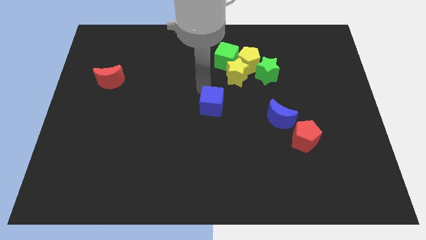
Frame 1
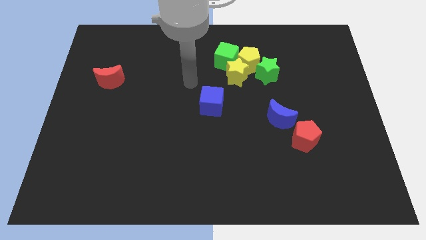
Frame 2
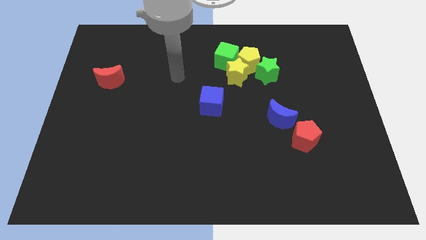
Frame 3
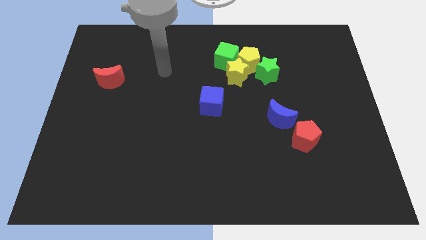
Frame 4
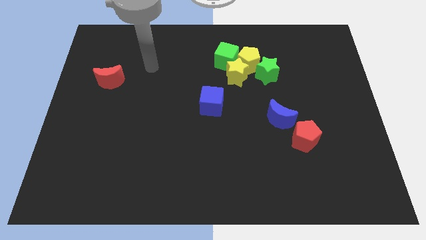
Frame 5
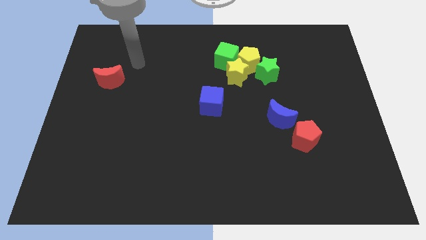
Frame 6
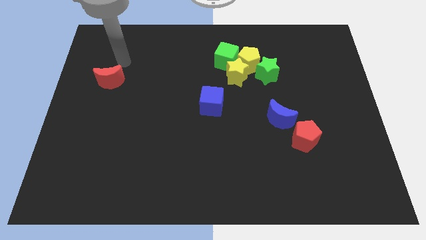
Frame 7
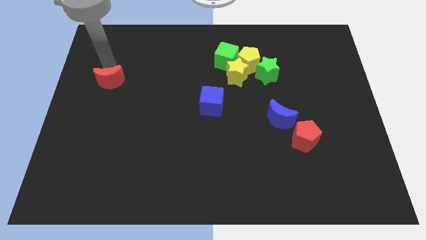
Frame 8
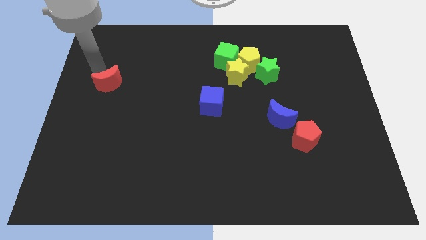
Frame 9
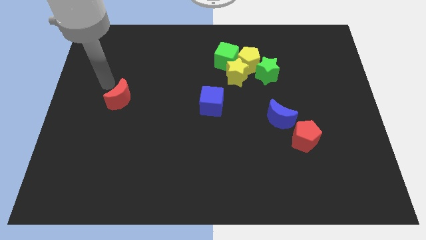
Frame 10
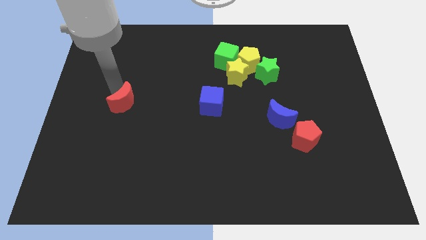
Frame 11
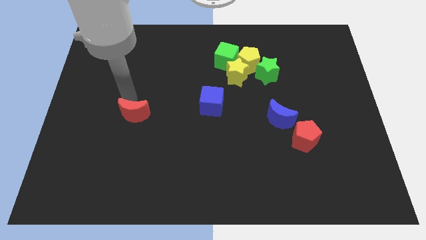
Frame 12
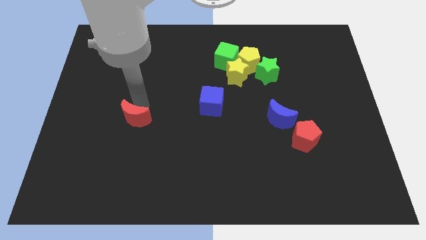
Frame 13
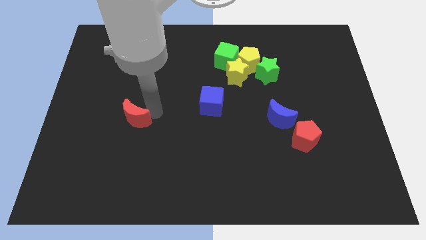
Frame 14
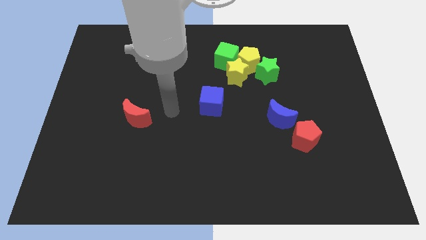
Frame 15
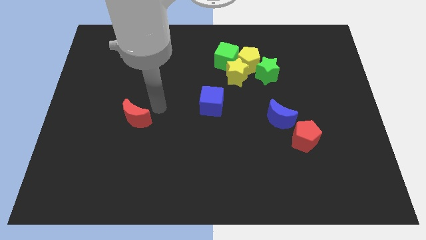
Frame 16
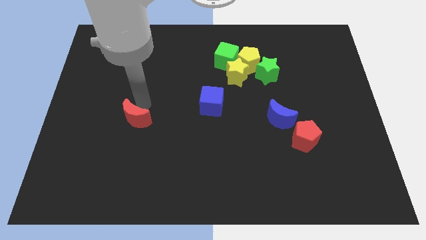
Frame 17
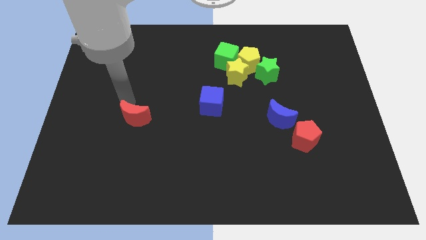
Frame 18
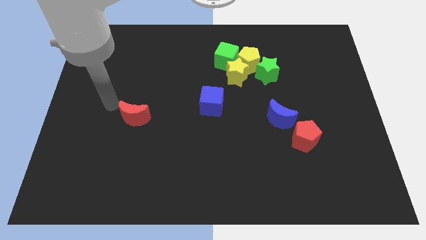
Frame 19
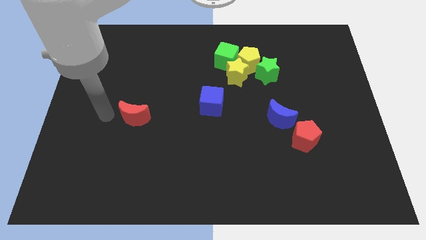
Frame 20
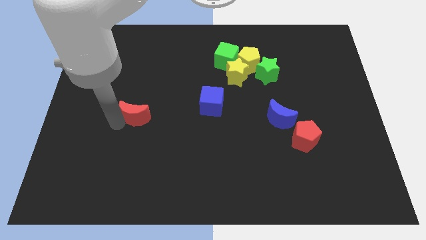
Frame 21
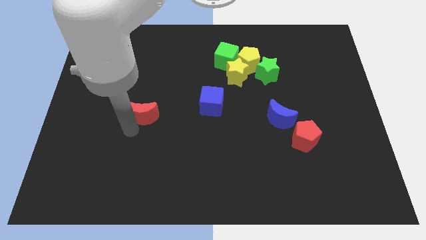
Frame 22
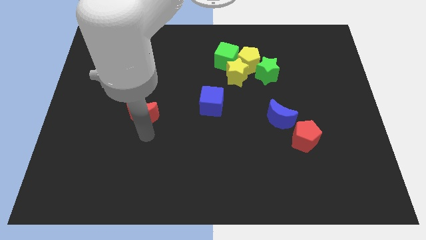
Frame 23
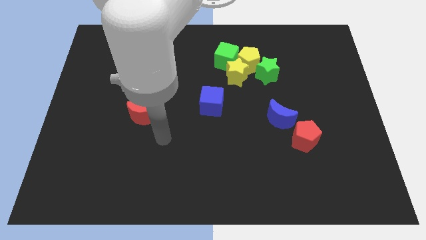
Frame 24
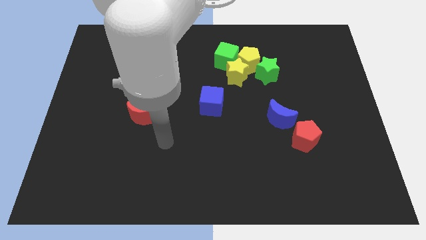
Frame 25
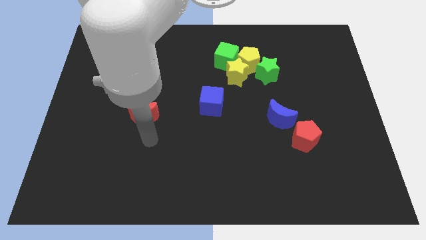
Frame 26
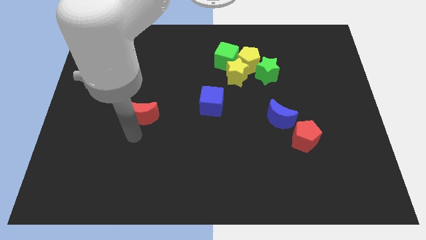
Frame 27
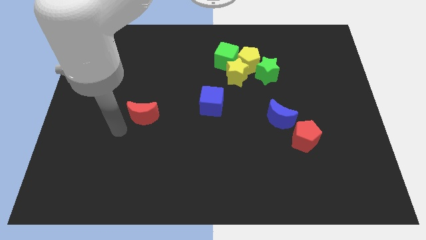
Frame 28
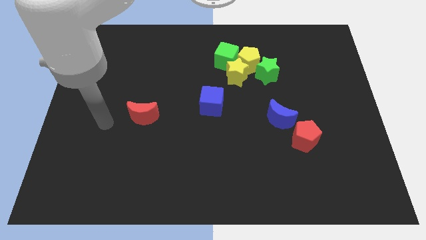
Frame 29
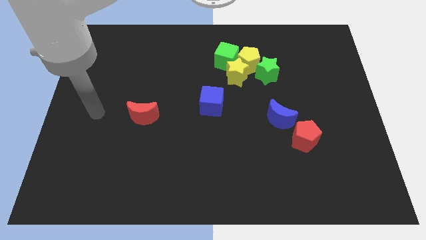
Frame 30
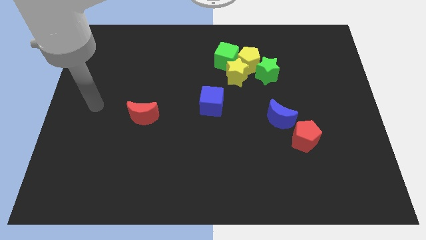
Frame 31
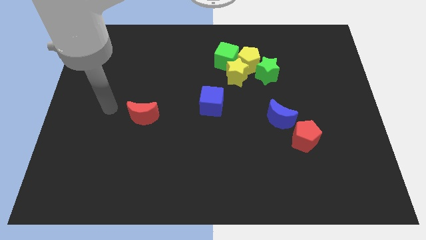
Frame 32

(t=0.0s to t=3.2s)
place the red moon left to the blue cube

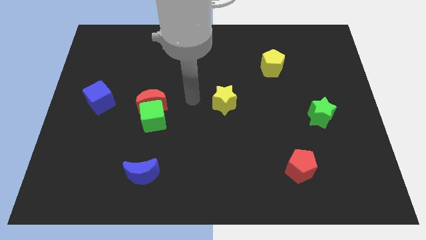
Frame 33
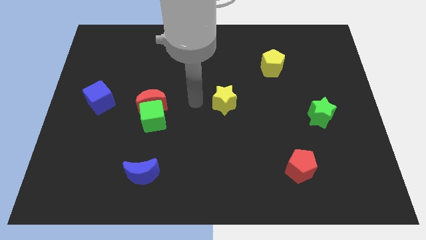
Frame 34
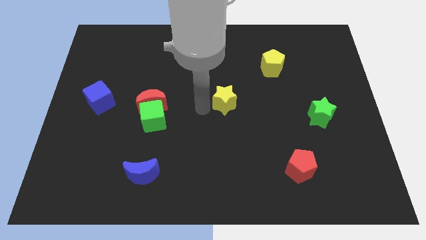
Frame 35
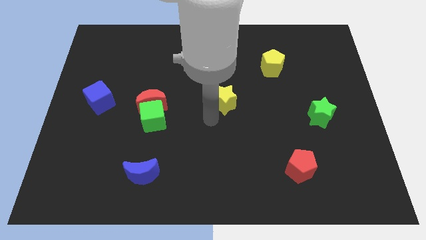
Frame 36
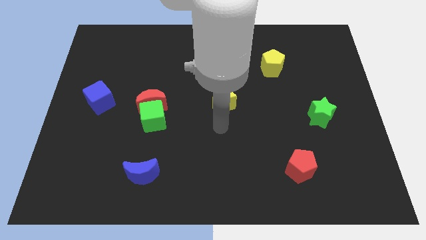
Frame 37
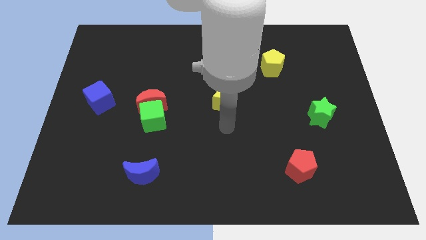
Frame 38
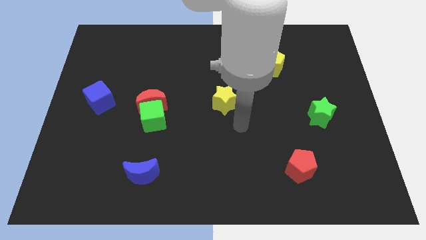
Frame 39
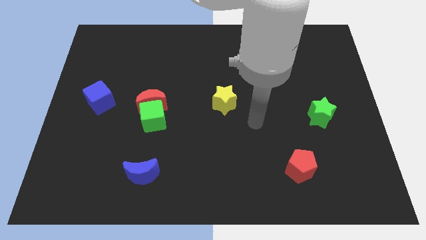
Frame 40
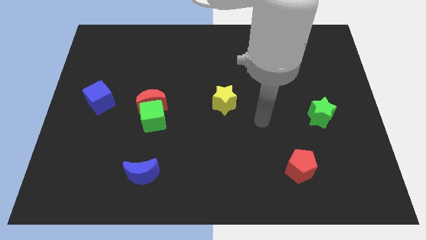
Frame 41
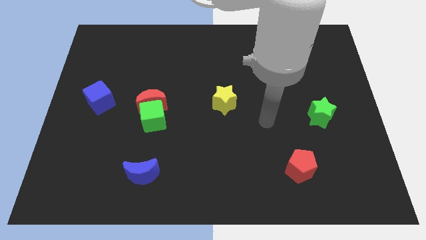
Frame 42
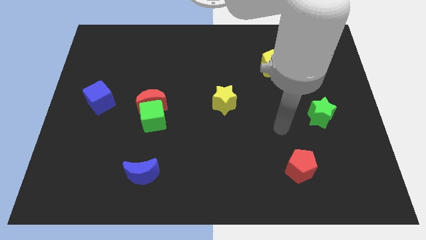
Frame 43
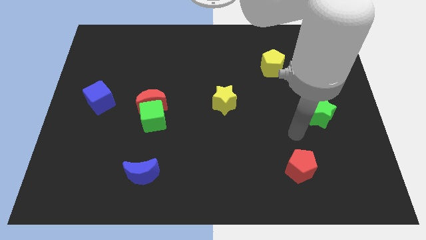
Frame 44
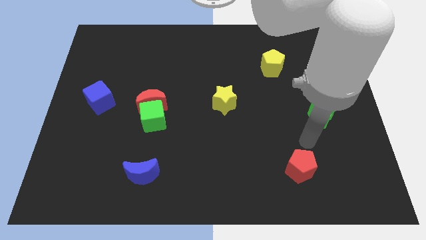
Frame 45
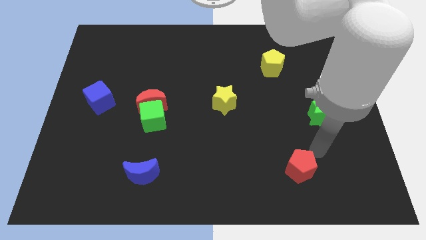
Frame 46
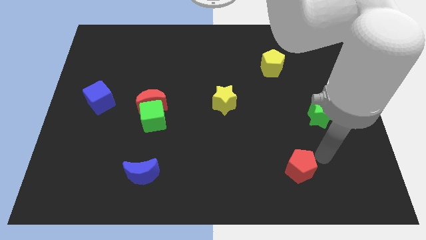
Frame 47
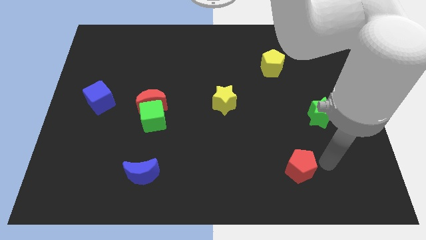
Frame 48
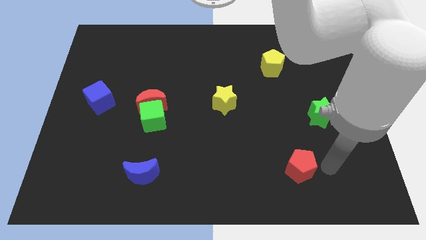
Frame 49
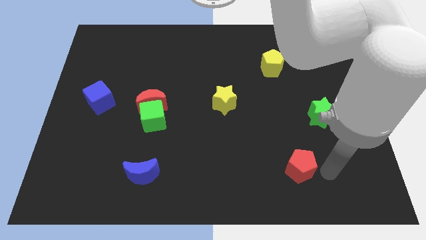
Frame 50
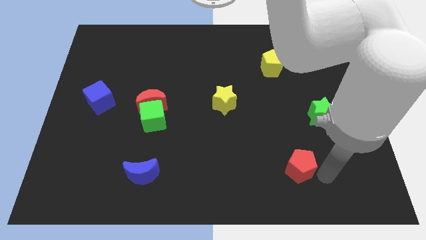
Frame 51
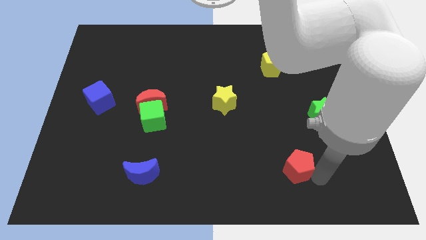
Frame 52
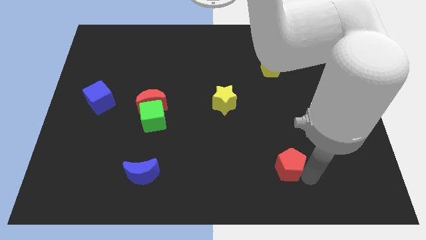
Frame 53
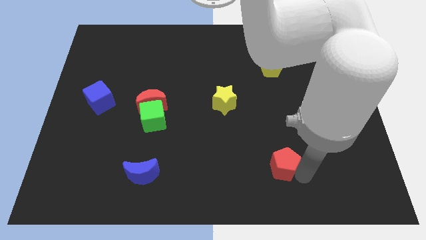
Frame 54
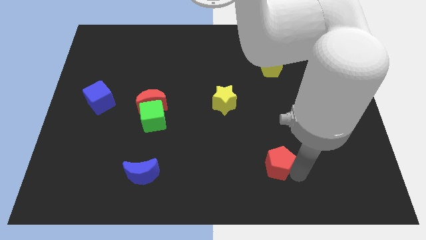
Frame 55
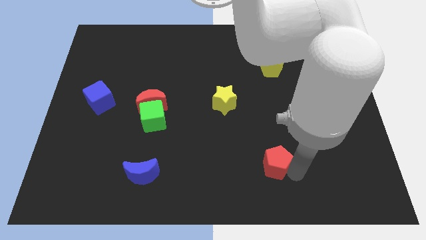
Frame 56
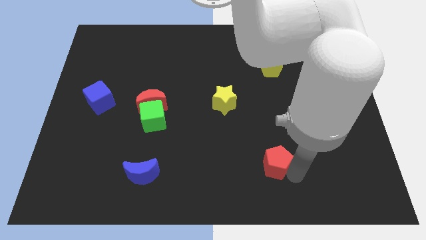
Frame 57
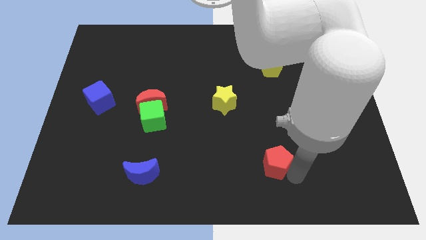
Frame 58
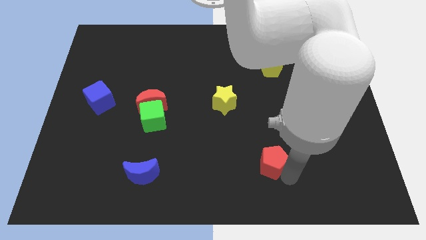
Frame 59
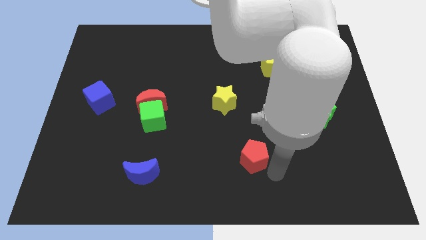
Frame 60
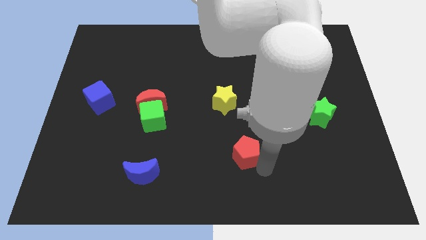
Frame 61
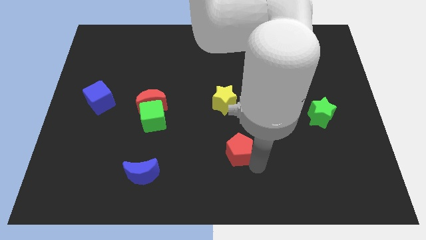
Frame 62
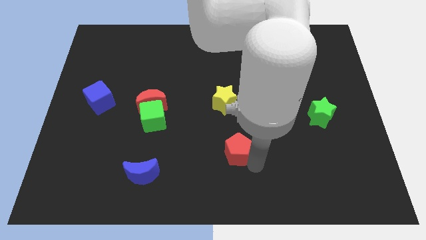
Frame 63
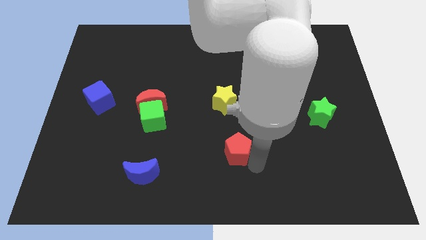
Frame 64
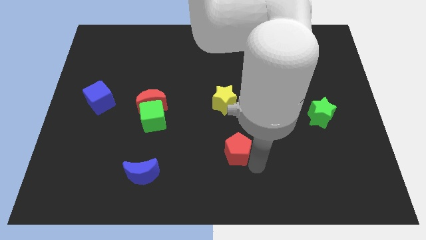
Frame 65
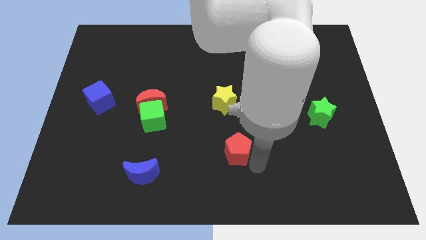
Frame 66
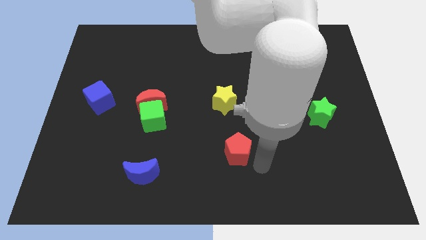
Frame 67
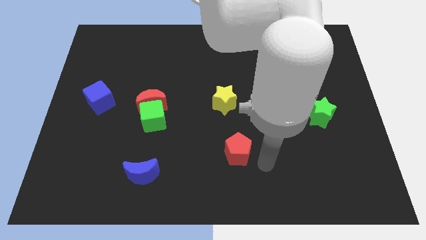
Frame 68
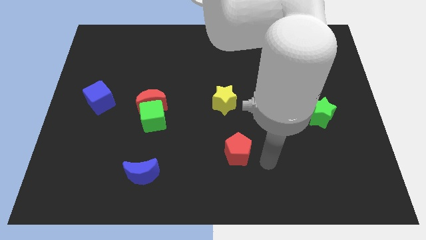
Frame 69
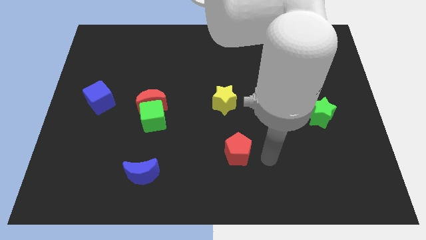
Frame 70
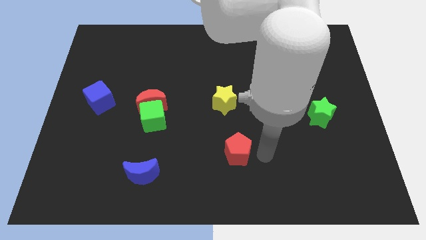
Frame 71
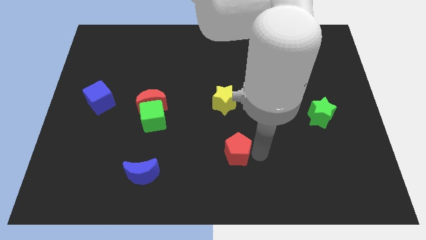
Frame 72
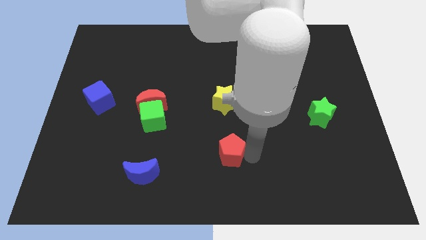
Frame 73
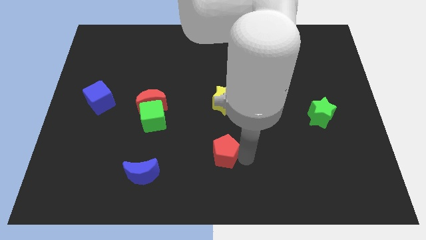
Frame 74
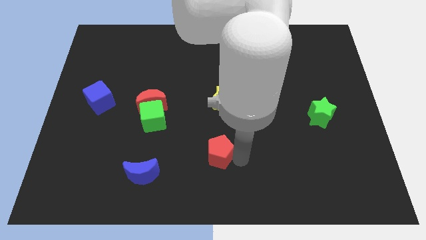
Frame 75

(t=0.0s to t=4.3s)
move the red pentagon to the bottom of the yellow star

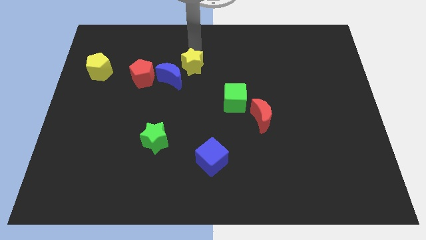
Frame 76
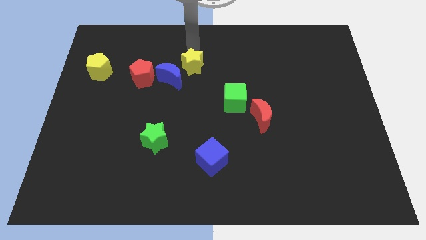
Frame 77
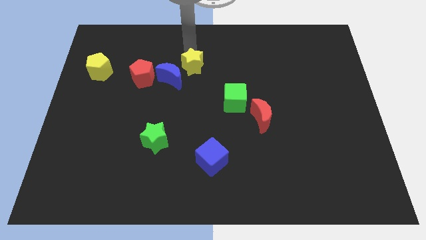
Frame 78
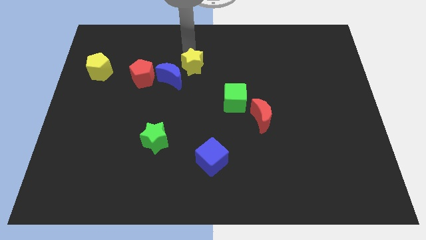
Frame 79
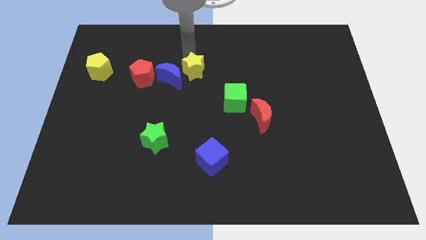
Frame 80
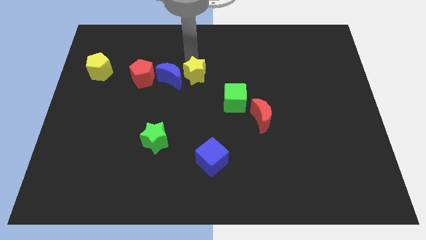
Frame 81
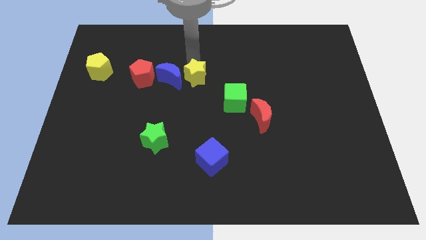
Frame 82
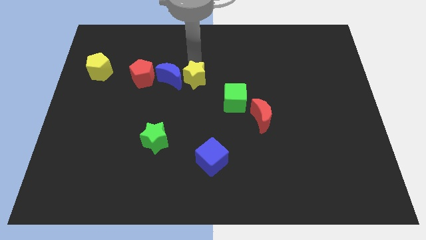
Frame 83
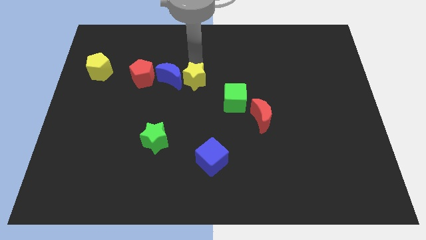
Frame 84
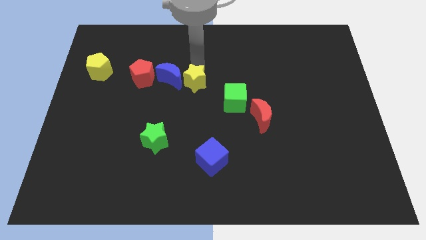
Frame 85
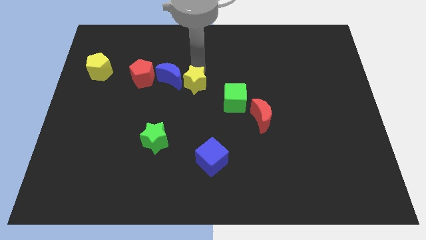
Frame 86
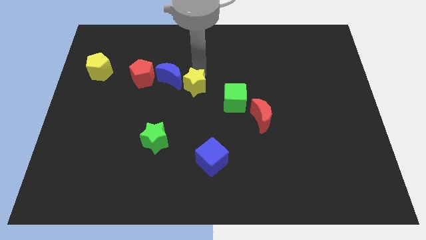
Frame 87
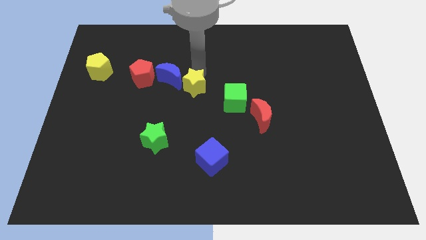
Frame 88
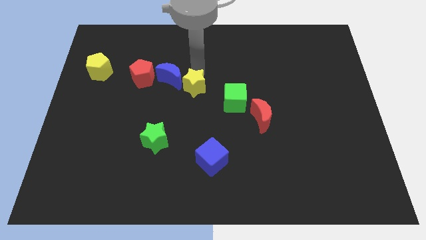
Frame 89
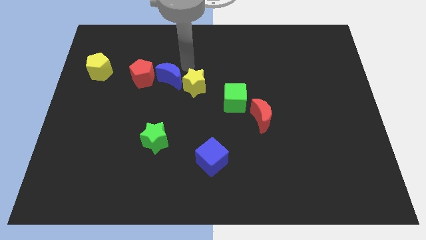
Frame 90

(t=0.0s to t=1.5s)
move the yellow star close to the blue crescent
